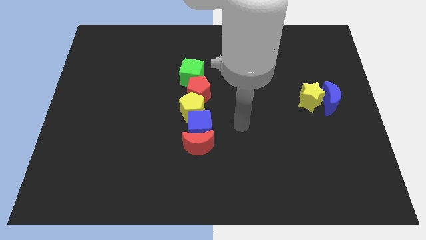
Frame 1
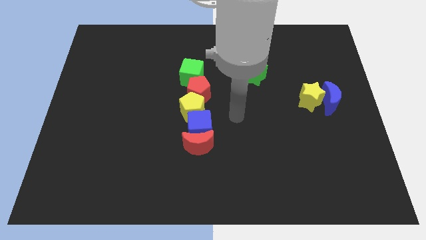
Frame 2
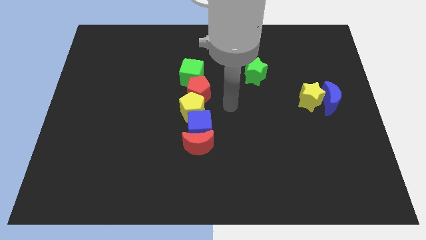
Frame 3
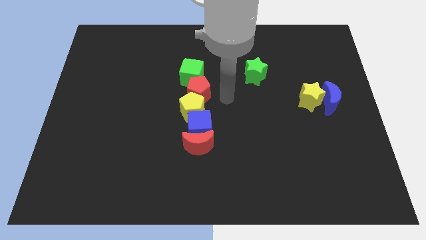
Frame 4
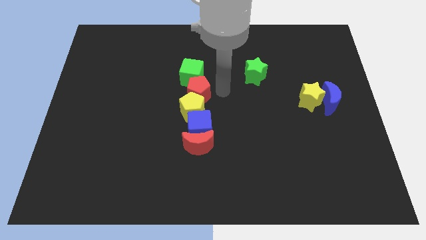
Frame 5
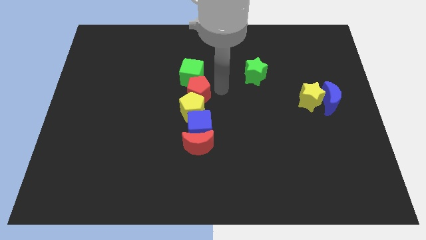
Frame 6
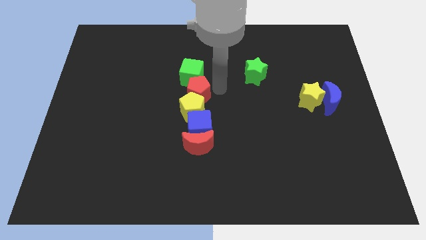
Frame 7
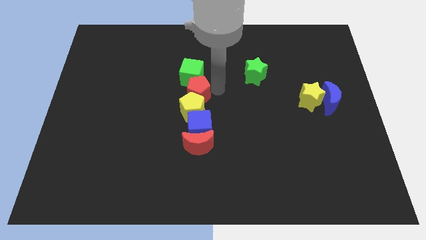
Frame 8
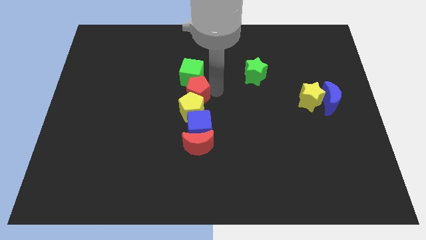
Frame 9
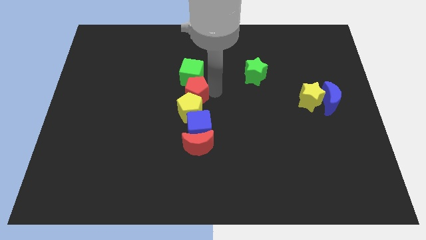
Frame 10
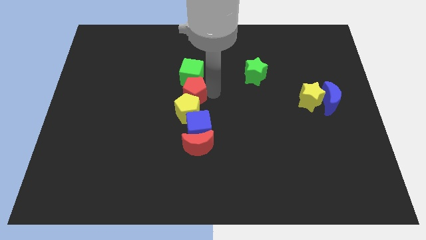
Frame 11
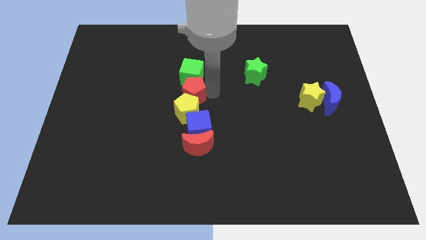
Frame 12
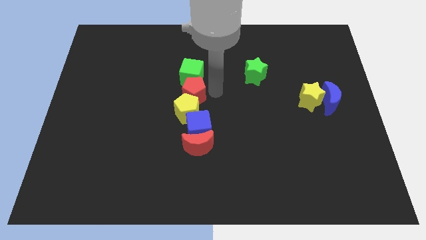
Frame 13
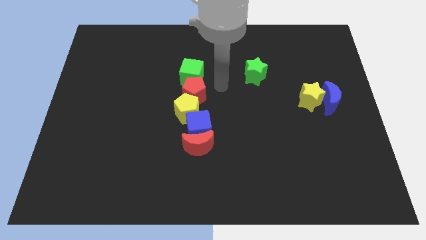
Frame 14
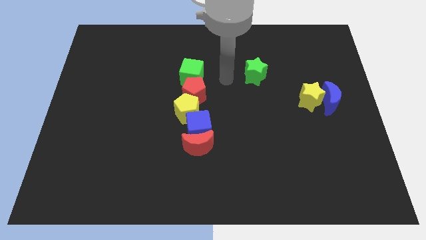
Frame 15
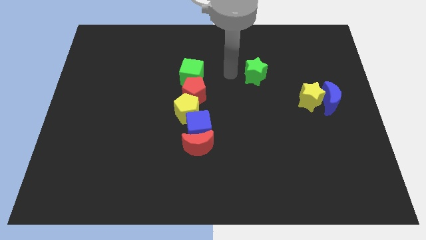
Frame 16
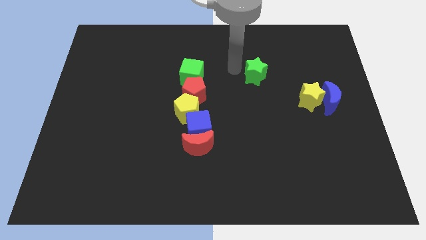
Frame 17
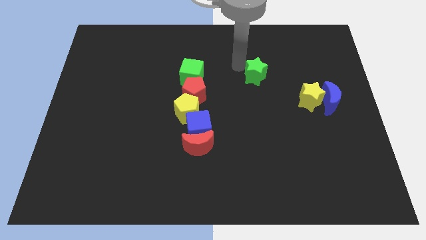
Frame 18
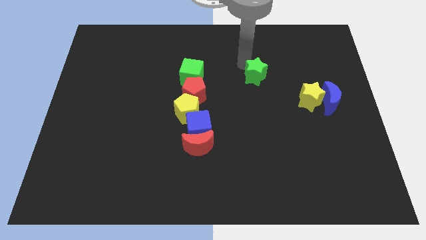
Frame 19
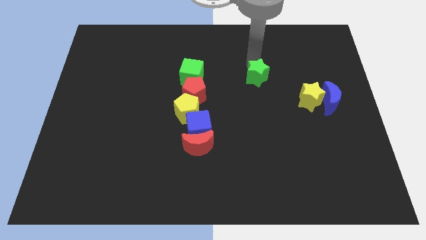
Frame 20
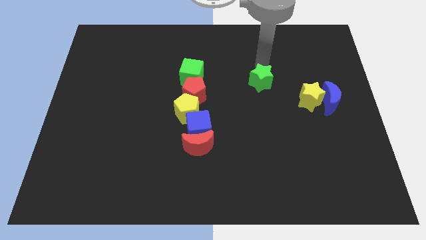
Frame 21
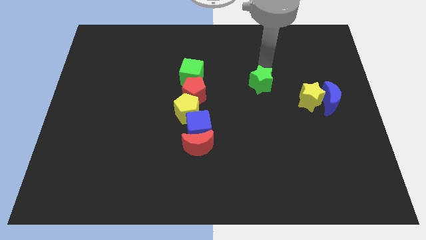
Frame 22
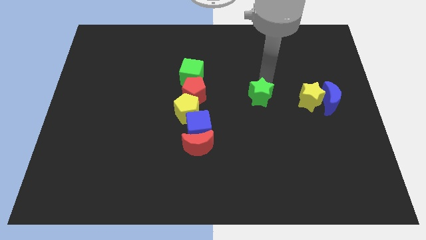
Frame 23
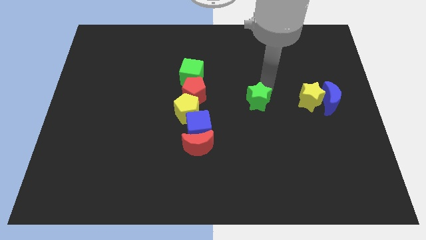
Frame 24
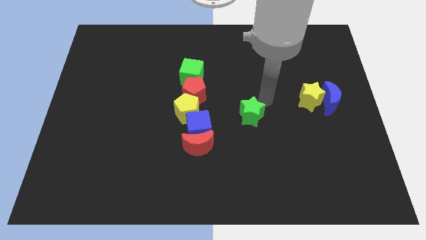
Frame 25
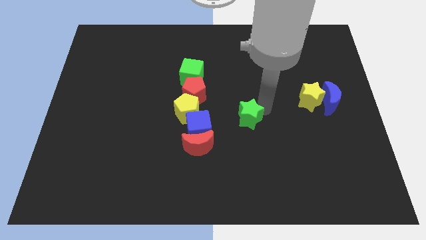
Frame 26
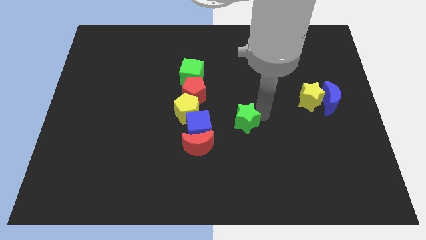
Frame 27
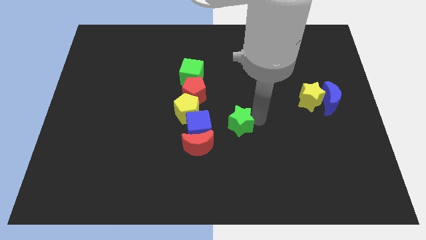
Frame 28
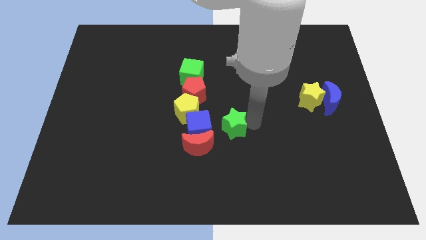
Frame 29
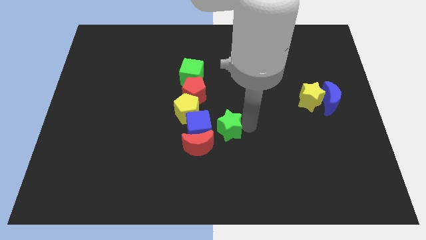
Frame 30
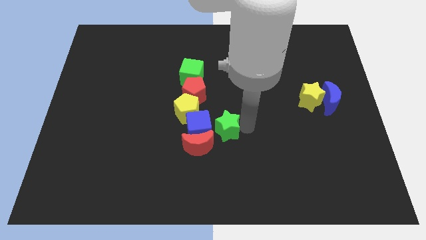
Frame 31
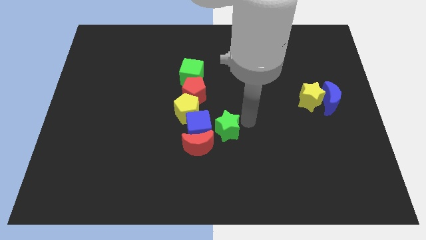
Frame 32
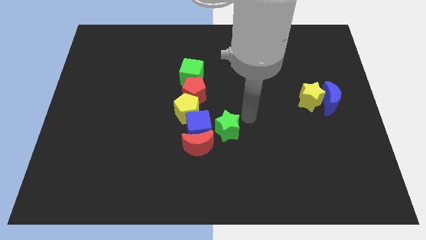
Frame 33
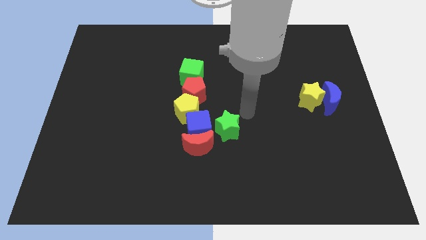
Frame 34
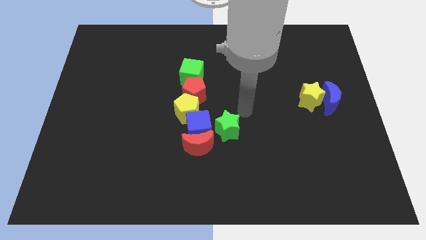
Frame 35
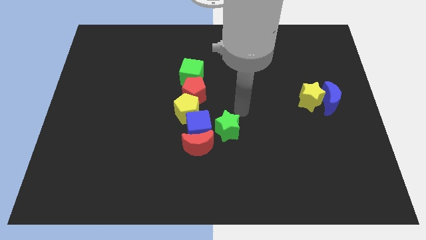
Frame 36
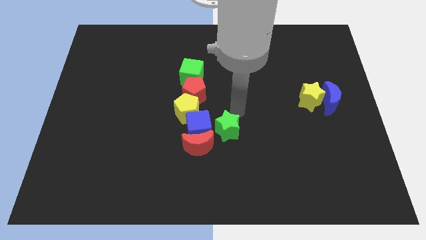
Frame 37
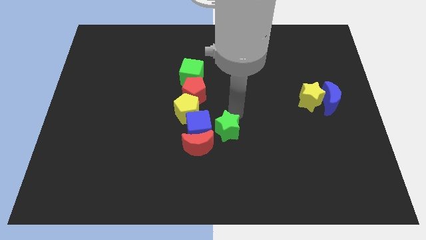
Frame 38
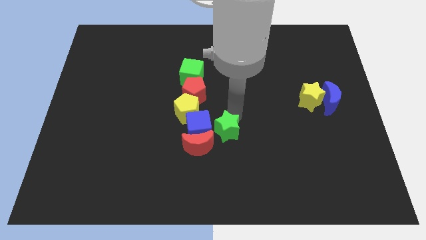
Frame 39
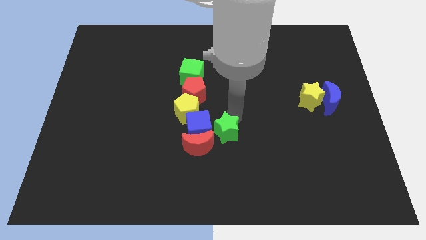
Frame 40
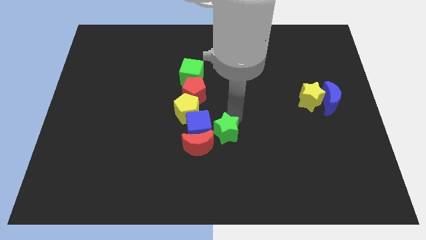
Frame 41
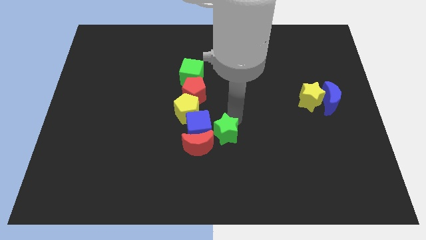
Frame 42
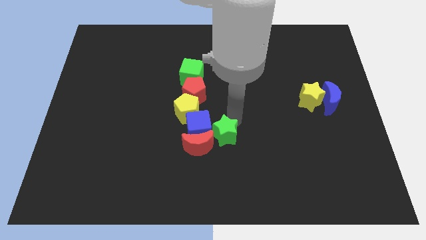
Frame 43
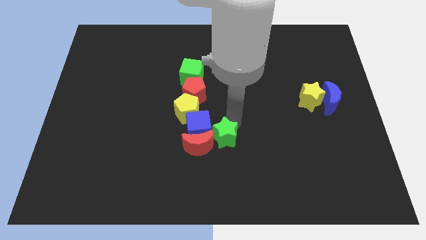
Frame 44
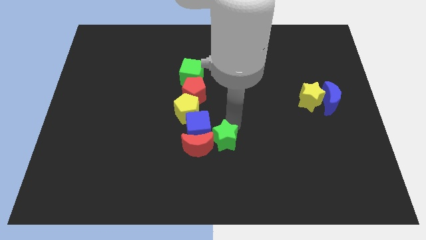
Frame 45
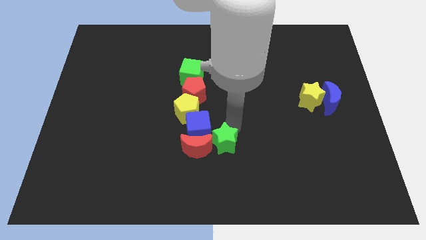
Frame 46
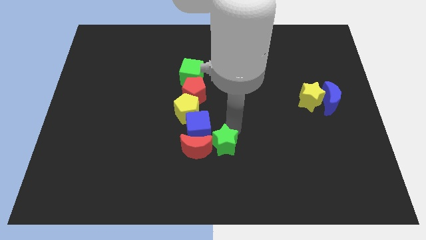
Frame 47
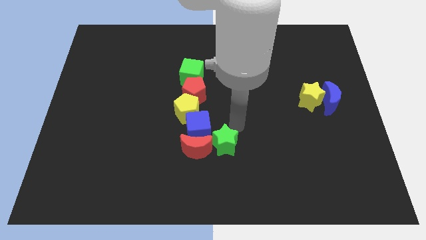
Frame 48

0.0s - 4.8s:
move the green star to the right of the red moon

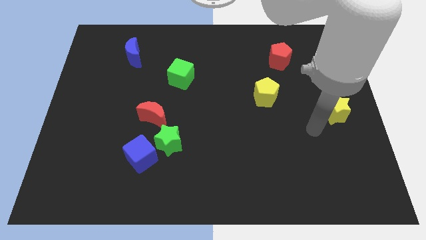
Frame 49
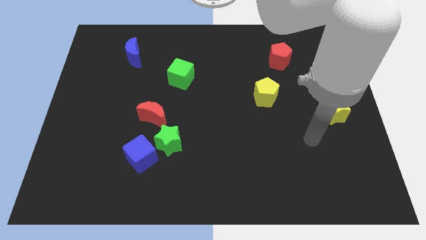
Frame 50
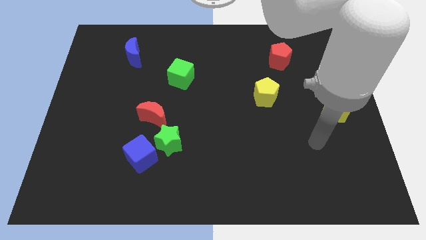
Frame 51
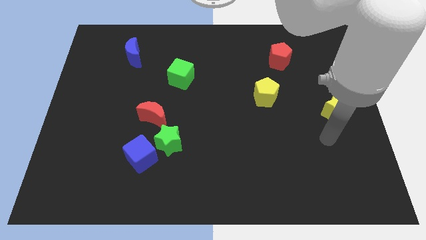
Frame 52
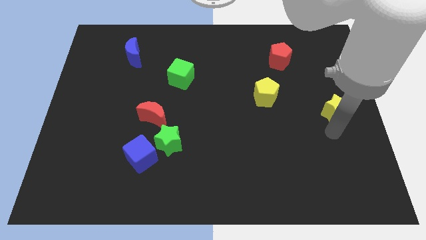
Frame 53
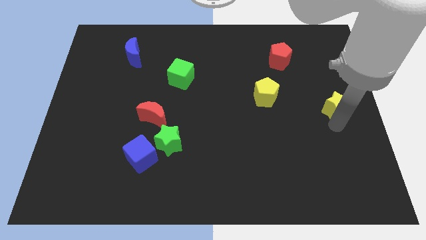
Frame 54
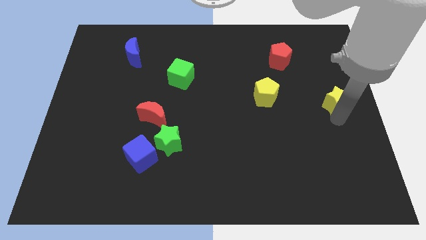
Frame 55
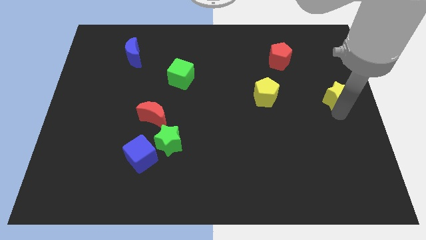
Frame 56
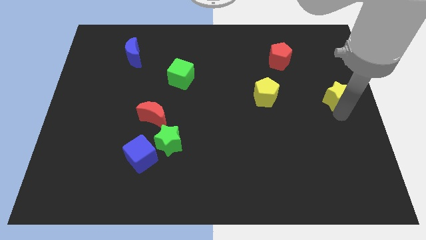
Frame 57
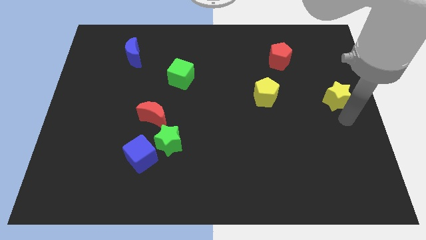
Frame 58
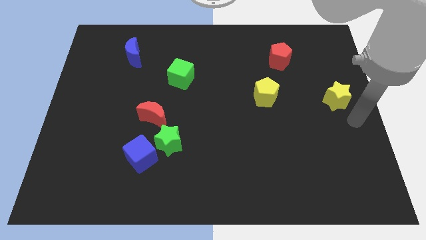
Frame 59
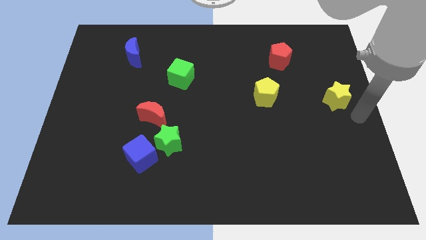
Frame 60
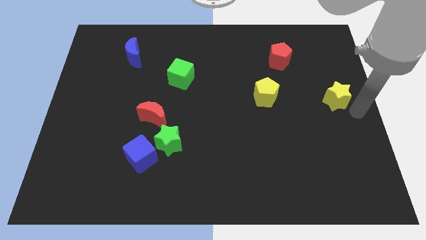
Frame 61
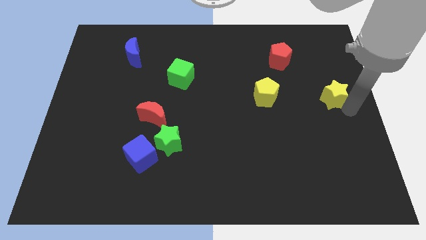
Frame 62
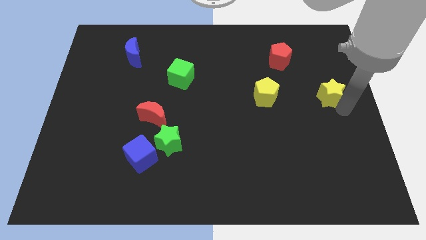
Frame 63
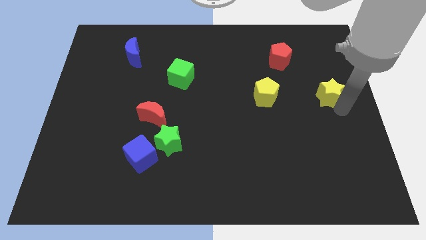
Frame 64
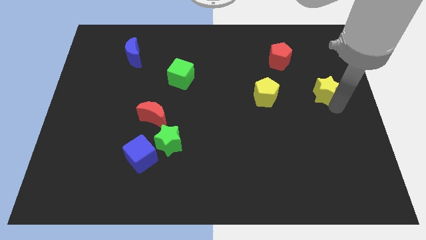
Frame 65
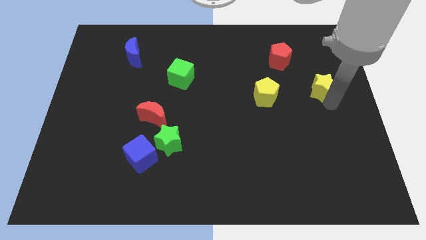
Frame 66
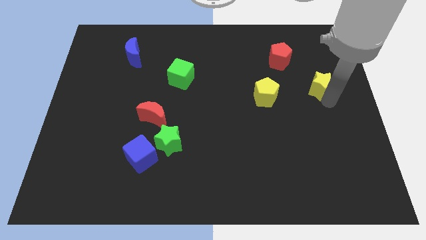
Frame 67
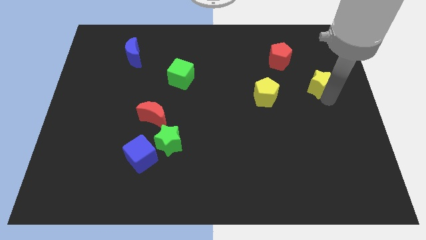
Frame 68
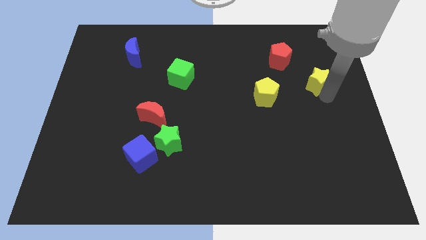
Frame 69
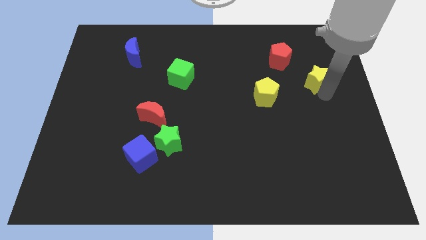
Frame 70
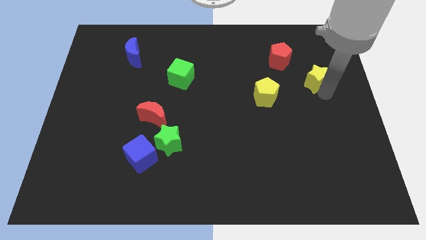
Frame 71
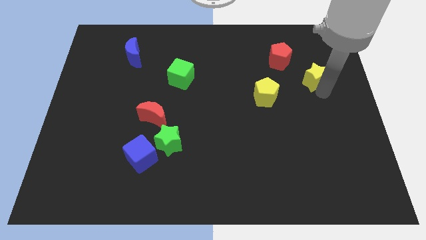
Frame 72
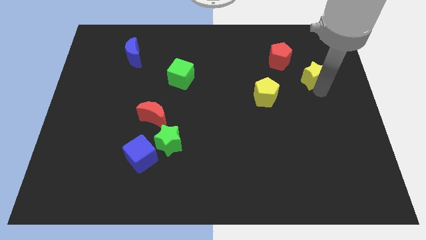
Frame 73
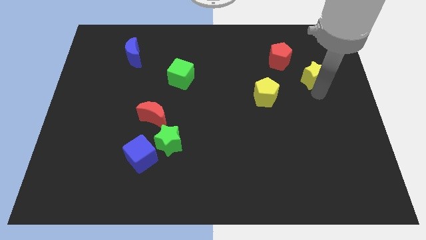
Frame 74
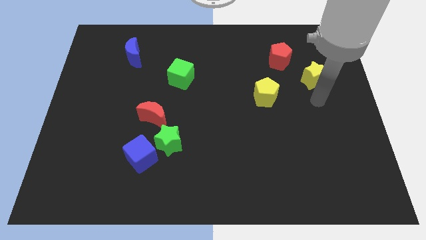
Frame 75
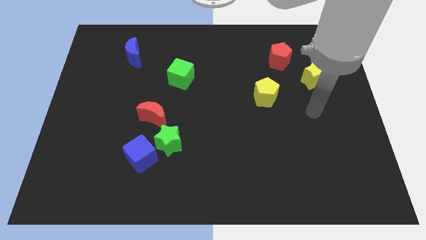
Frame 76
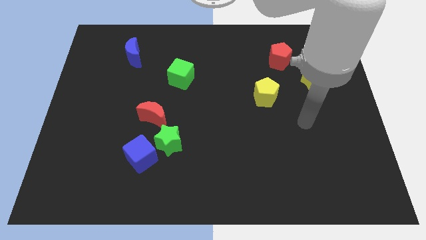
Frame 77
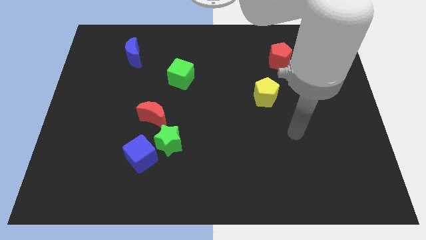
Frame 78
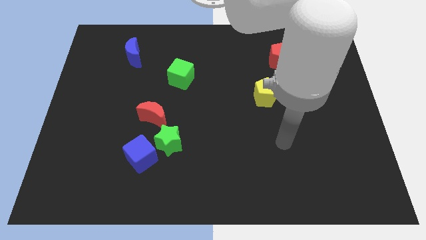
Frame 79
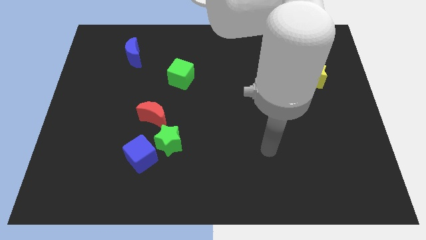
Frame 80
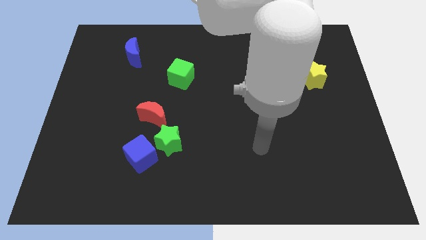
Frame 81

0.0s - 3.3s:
drag the yellow star slightly to the left

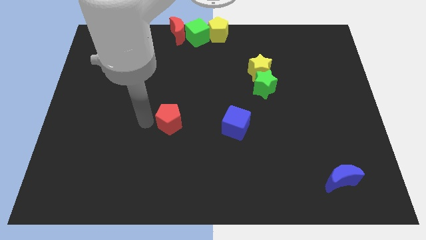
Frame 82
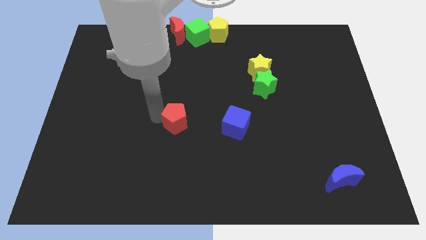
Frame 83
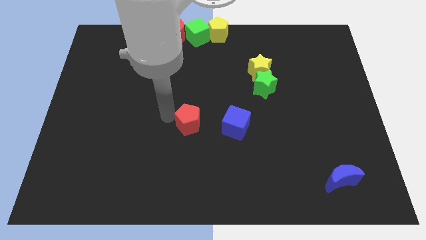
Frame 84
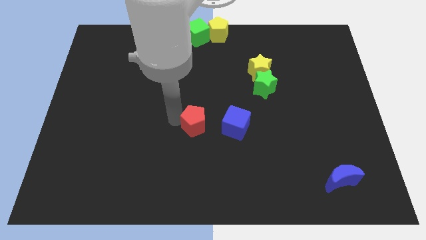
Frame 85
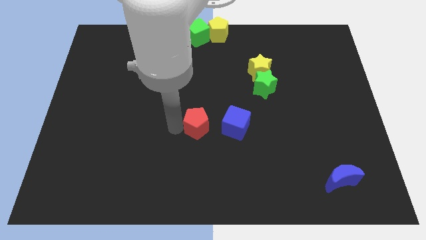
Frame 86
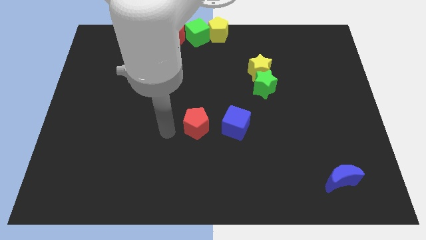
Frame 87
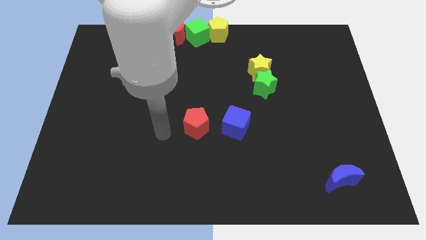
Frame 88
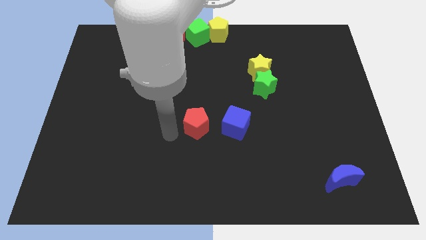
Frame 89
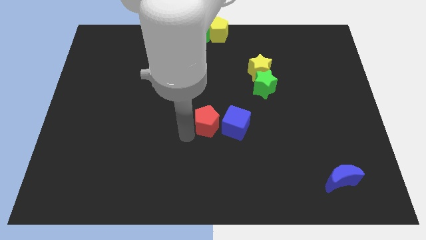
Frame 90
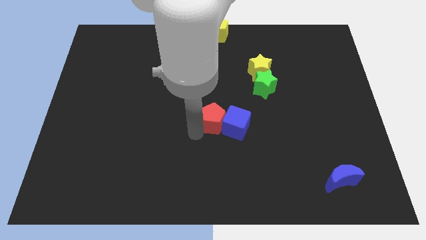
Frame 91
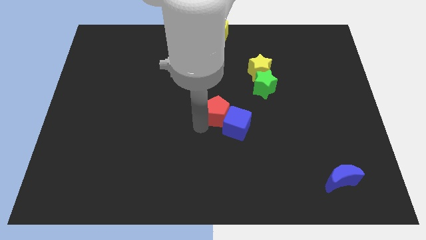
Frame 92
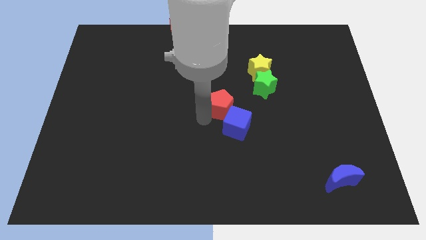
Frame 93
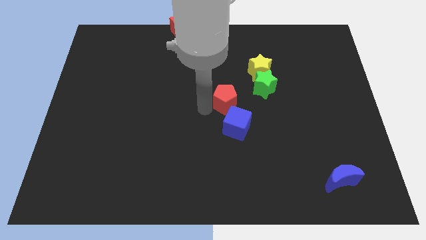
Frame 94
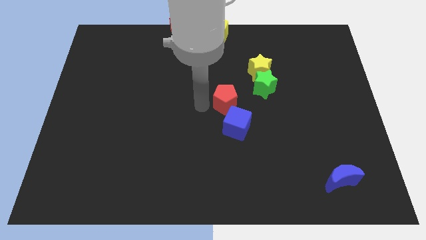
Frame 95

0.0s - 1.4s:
put the red pentagon at the top left of the blue cube
